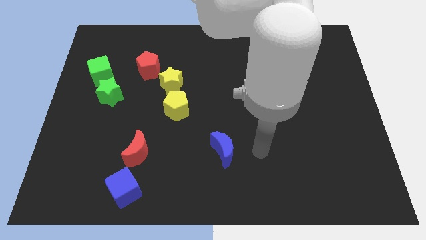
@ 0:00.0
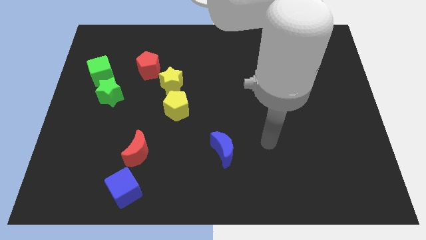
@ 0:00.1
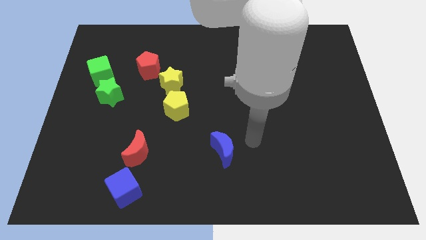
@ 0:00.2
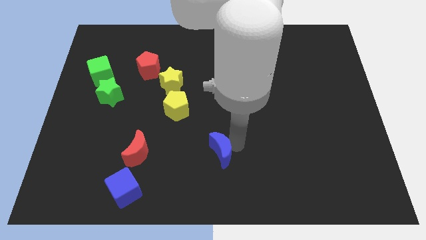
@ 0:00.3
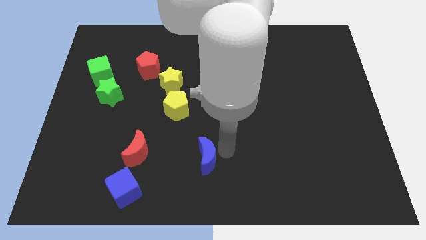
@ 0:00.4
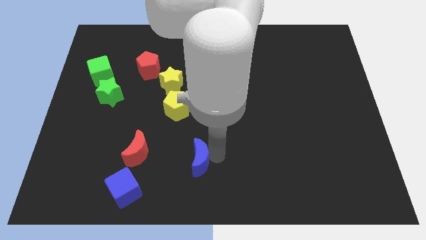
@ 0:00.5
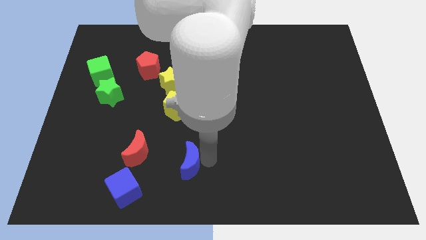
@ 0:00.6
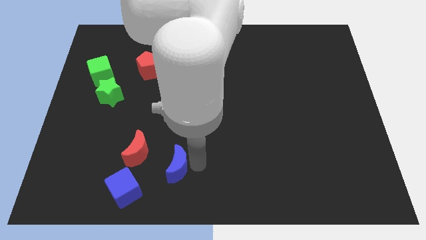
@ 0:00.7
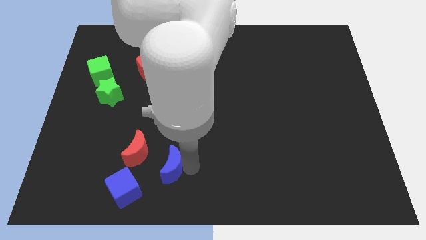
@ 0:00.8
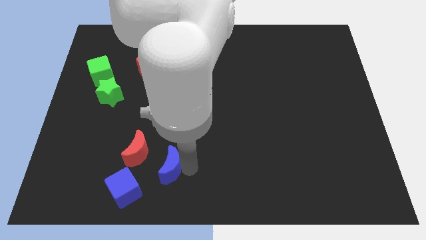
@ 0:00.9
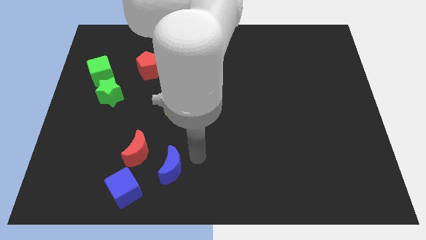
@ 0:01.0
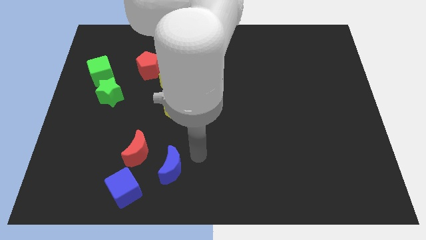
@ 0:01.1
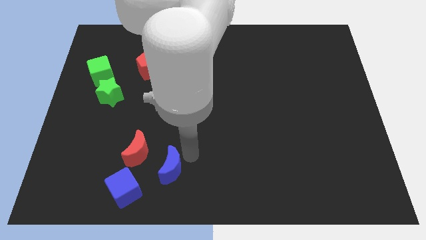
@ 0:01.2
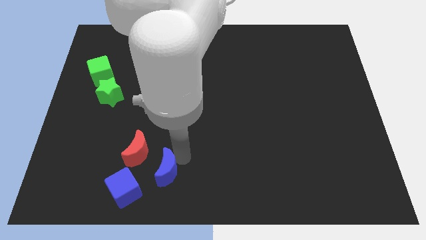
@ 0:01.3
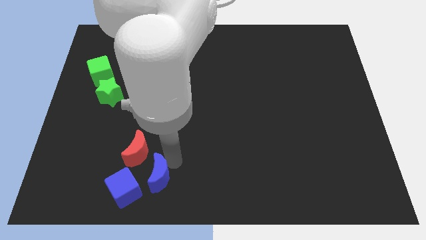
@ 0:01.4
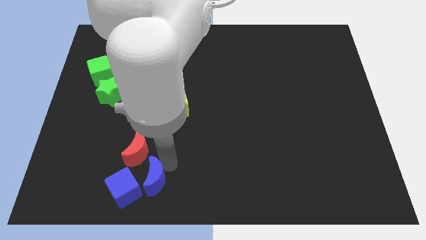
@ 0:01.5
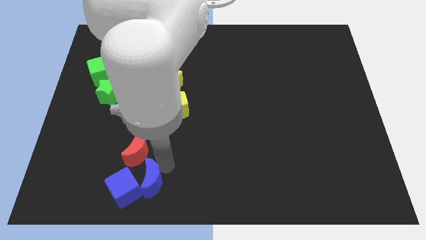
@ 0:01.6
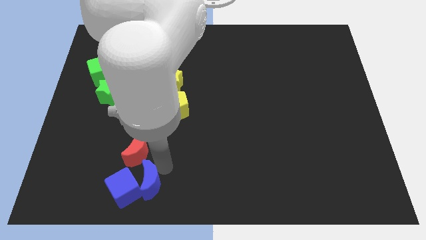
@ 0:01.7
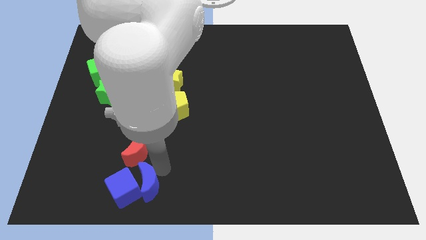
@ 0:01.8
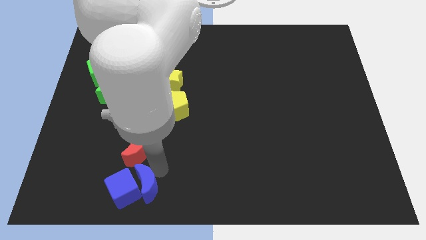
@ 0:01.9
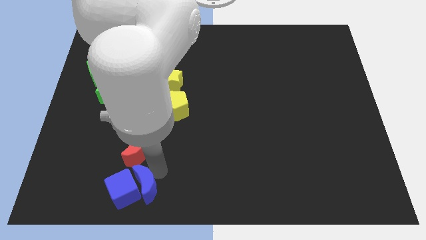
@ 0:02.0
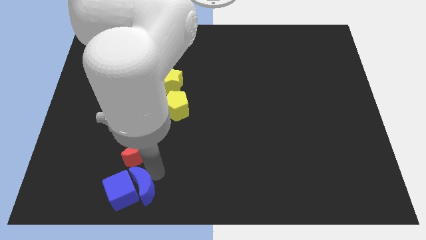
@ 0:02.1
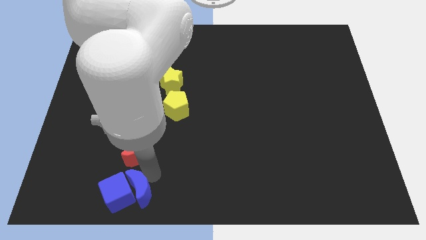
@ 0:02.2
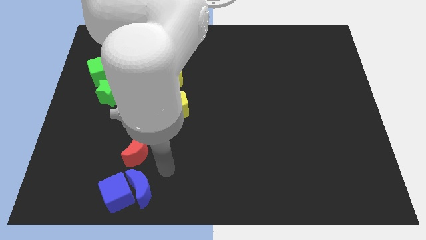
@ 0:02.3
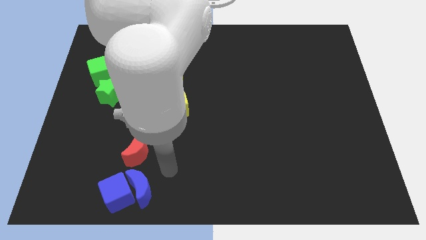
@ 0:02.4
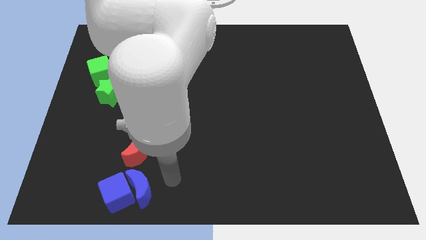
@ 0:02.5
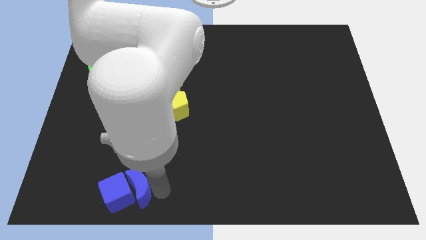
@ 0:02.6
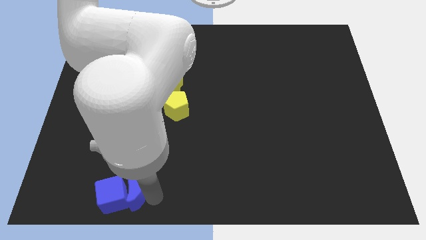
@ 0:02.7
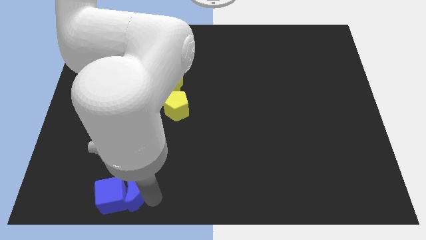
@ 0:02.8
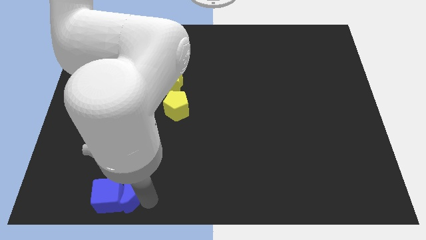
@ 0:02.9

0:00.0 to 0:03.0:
place blue crescent to the right of blue cube

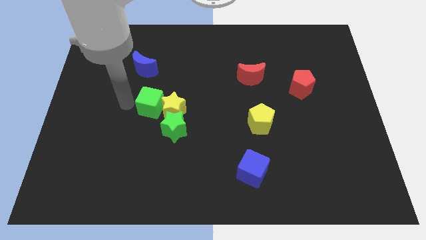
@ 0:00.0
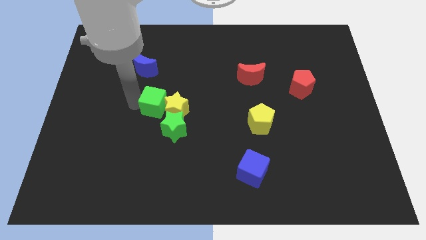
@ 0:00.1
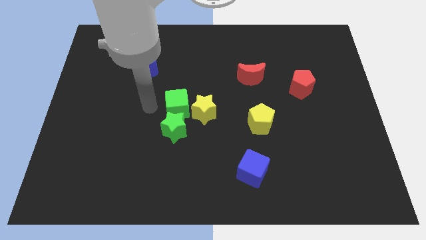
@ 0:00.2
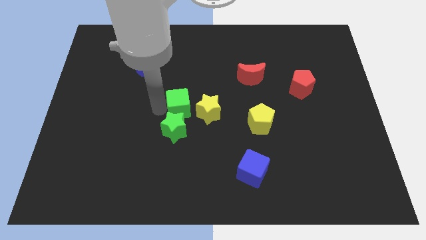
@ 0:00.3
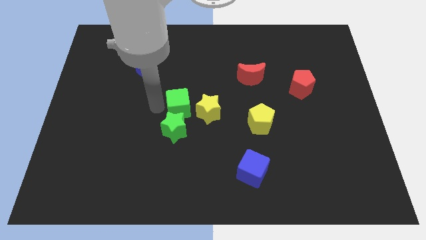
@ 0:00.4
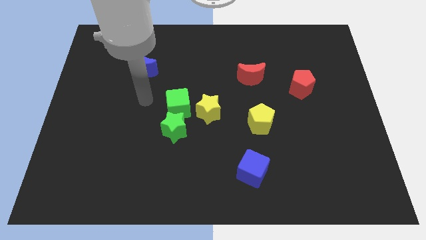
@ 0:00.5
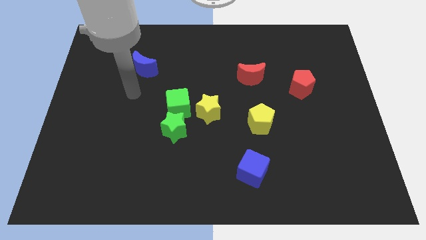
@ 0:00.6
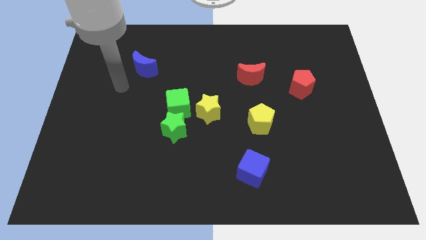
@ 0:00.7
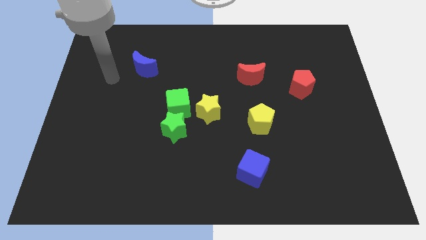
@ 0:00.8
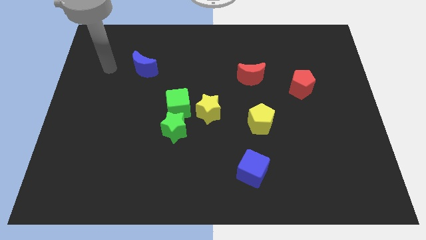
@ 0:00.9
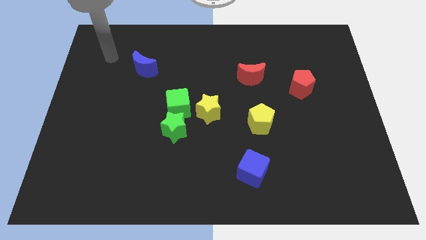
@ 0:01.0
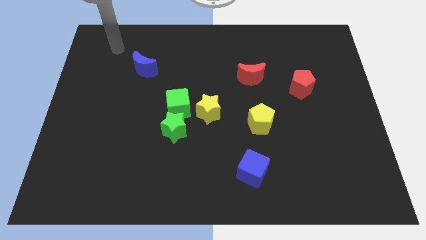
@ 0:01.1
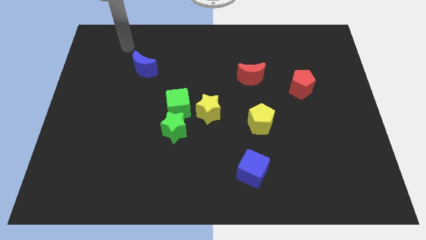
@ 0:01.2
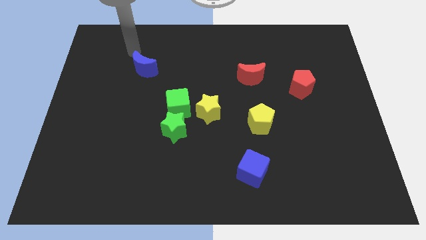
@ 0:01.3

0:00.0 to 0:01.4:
push the green cube and yellow star towards the right

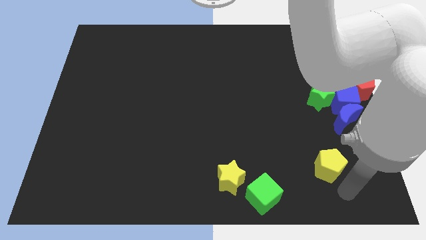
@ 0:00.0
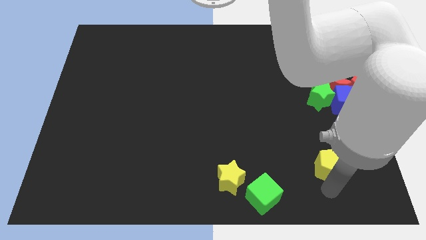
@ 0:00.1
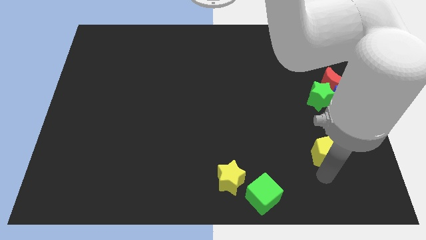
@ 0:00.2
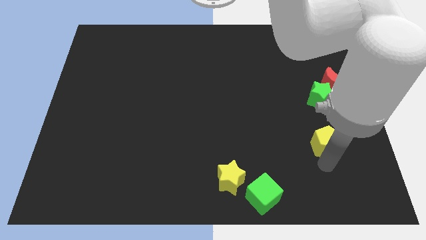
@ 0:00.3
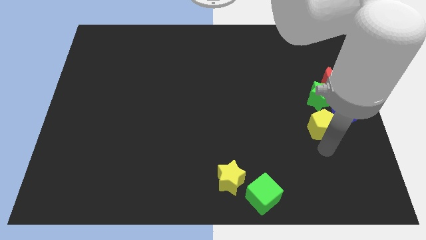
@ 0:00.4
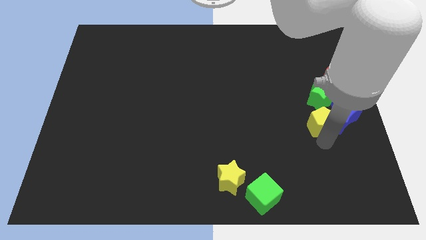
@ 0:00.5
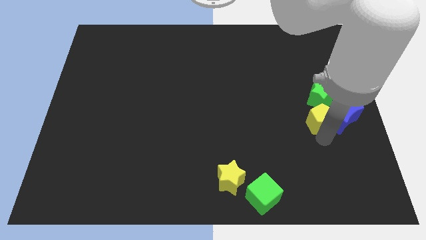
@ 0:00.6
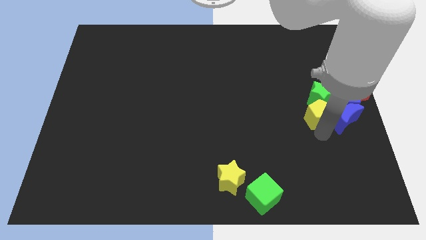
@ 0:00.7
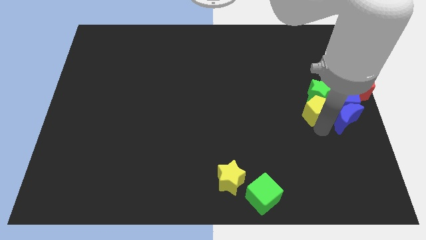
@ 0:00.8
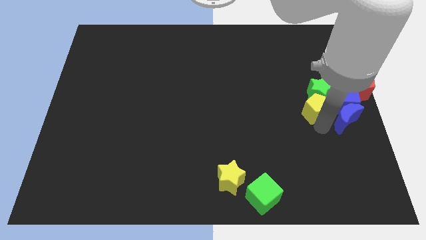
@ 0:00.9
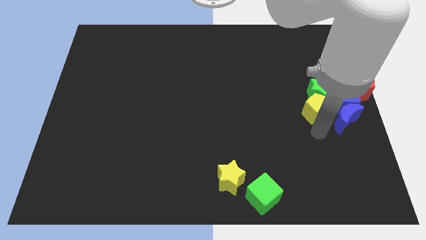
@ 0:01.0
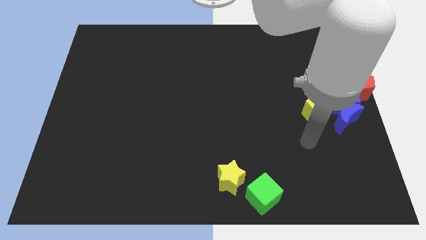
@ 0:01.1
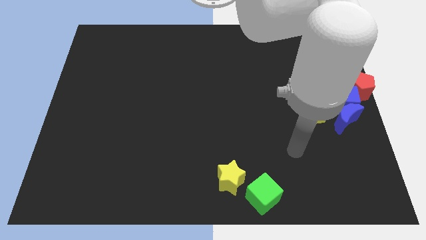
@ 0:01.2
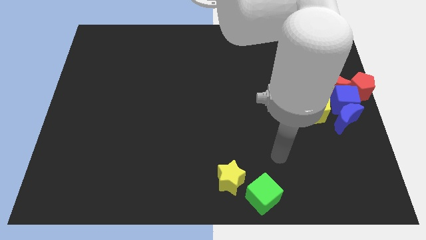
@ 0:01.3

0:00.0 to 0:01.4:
slide the yellow pentagon into the green star

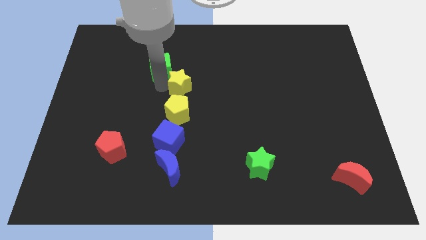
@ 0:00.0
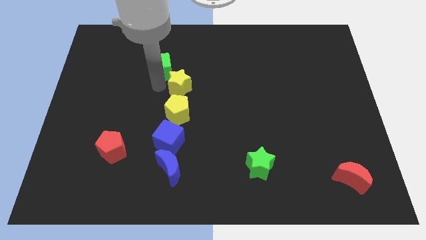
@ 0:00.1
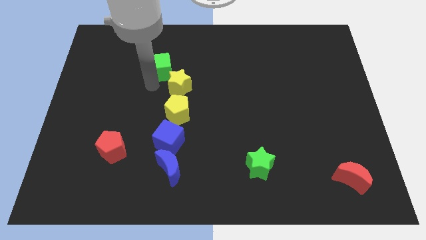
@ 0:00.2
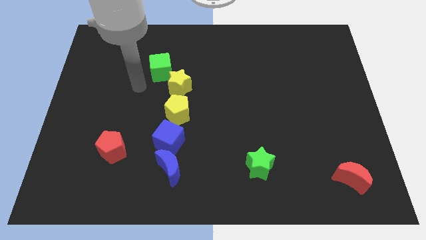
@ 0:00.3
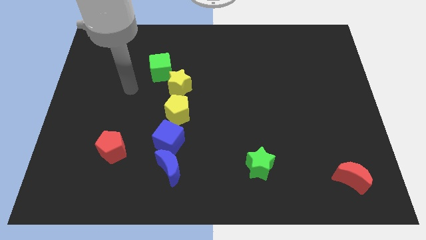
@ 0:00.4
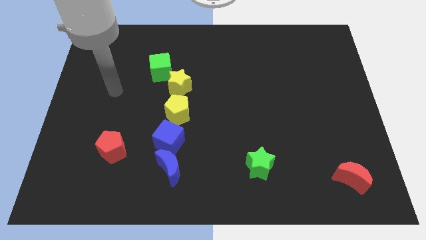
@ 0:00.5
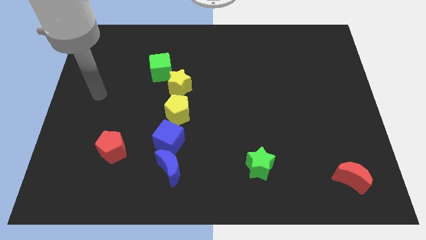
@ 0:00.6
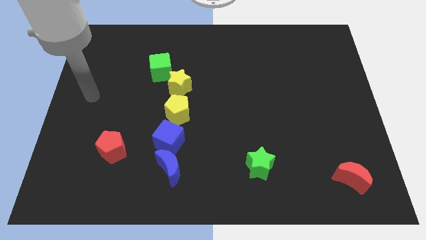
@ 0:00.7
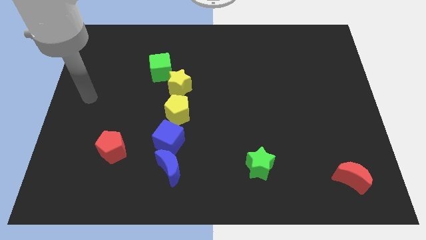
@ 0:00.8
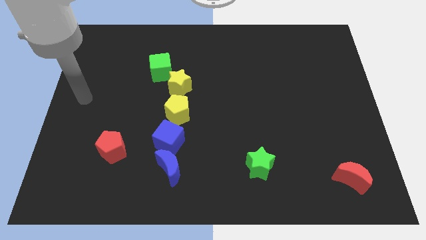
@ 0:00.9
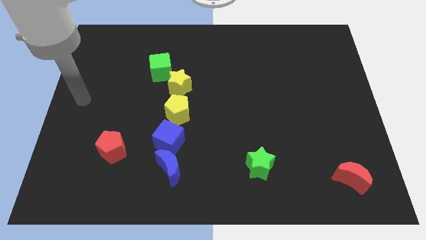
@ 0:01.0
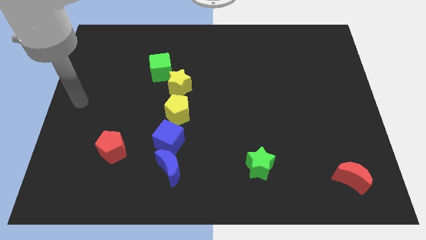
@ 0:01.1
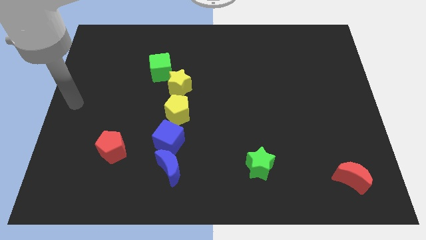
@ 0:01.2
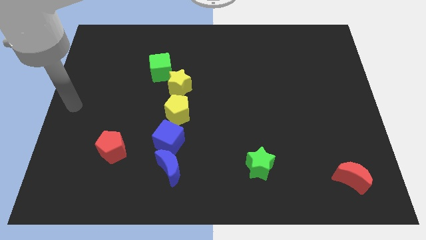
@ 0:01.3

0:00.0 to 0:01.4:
place your arm at the left center of the board

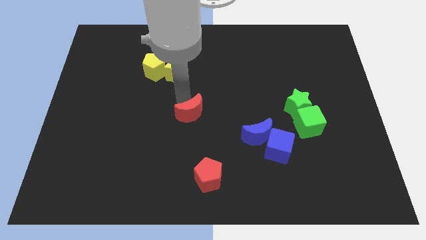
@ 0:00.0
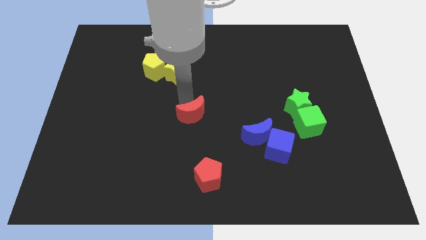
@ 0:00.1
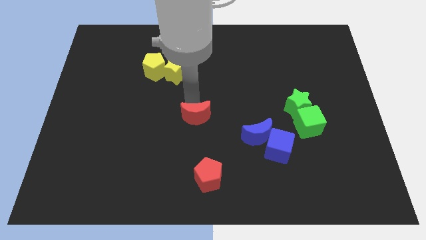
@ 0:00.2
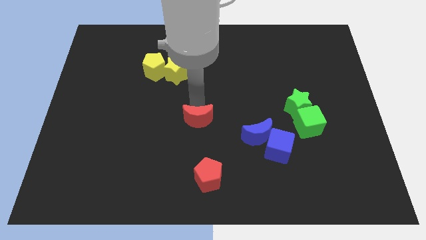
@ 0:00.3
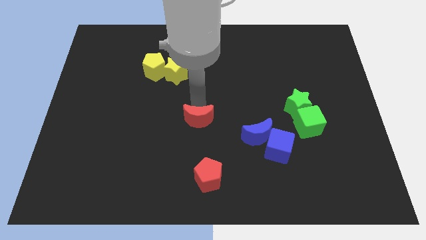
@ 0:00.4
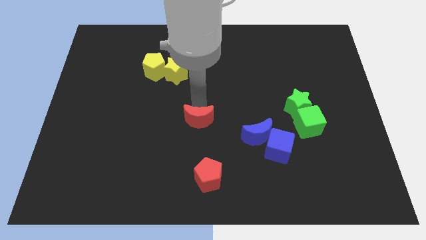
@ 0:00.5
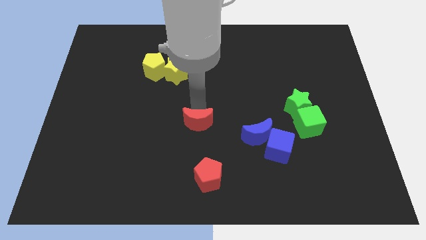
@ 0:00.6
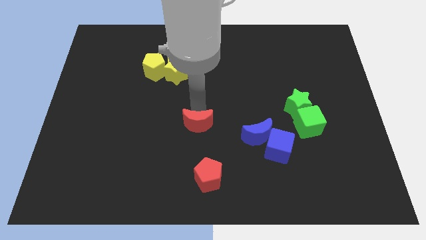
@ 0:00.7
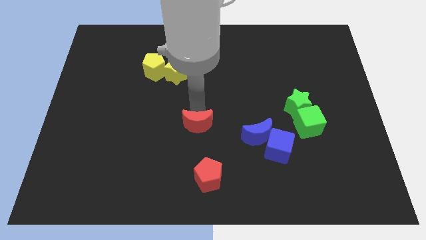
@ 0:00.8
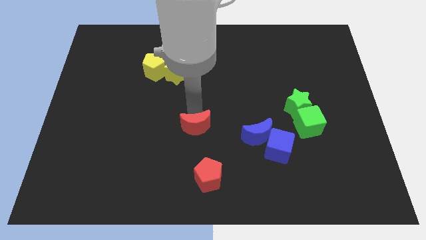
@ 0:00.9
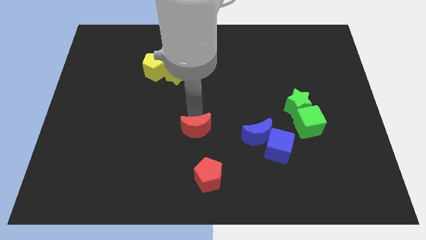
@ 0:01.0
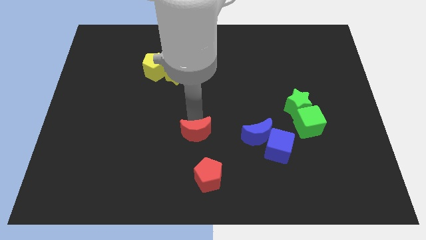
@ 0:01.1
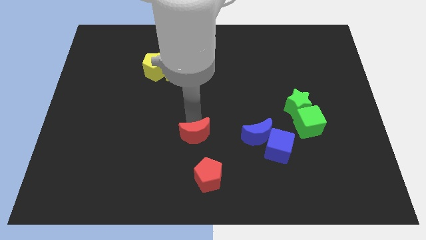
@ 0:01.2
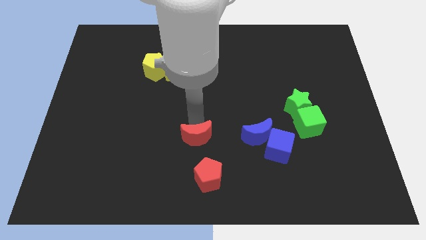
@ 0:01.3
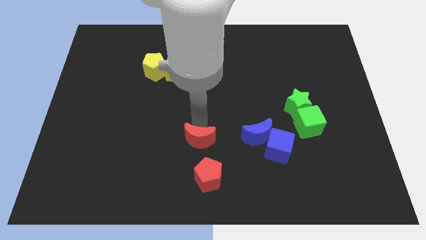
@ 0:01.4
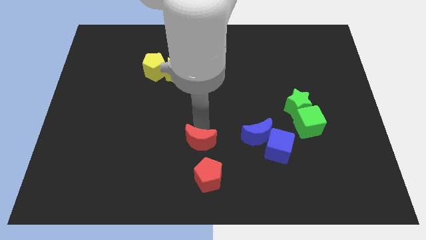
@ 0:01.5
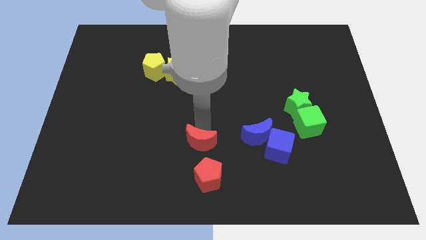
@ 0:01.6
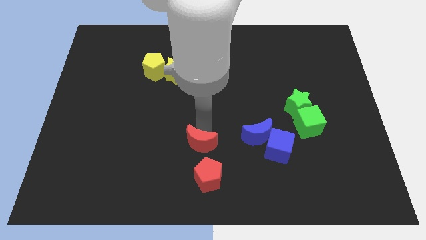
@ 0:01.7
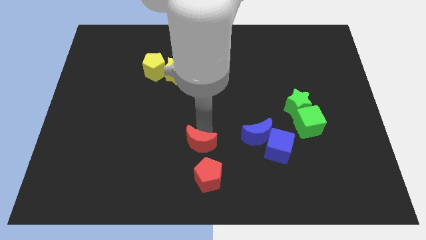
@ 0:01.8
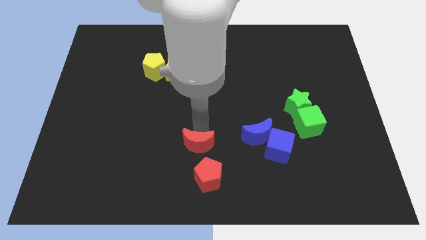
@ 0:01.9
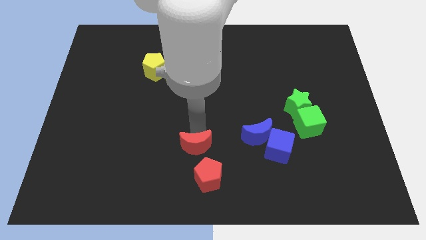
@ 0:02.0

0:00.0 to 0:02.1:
move red moon above red pentagon
